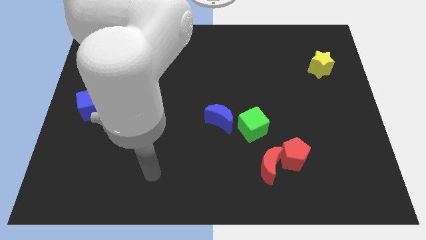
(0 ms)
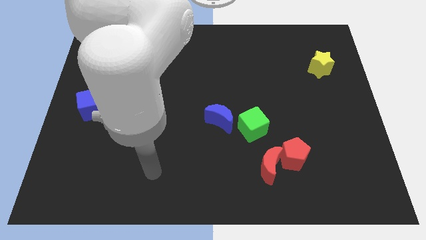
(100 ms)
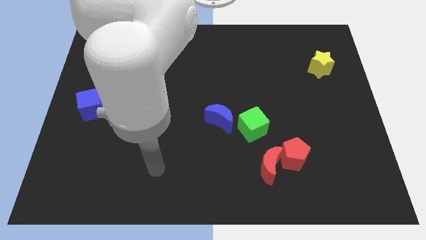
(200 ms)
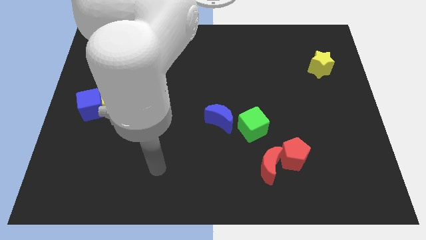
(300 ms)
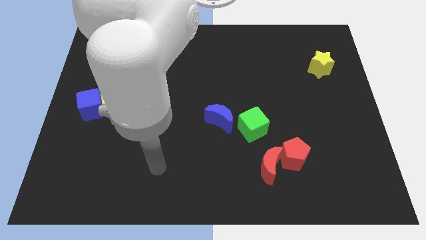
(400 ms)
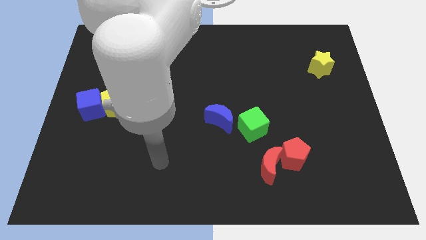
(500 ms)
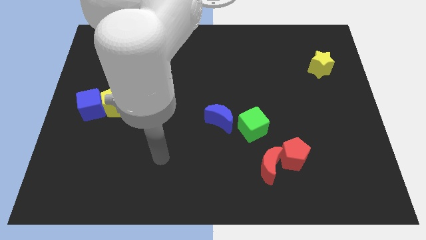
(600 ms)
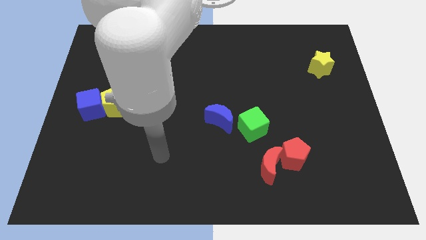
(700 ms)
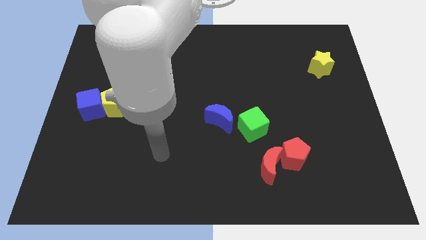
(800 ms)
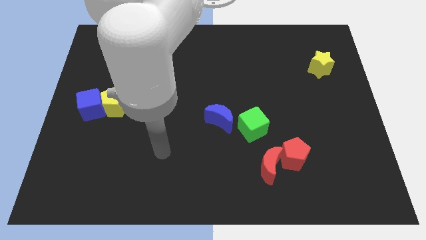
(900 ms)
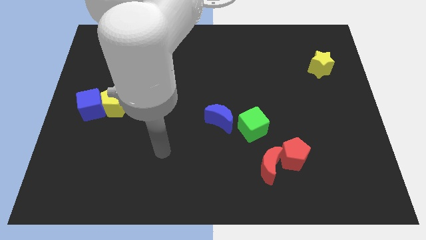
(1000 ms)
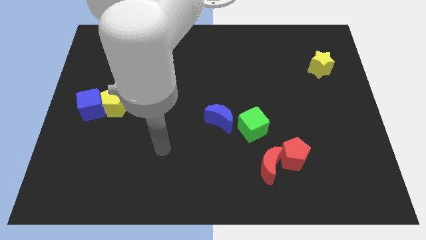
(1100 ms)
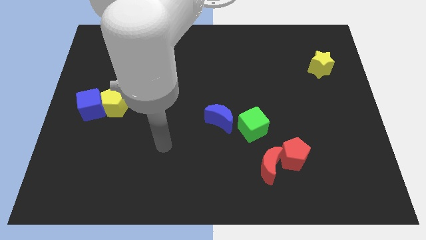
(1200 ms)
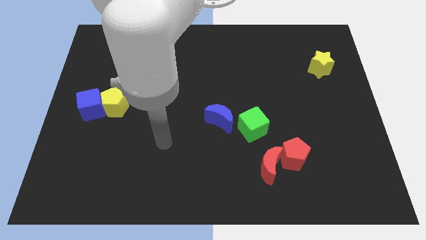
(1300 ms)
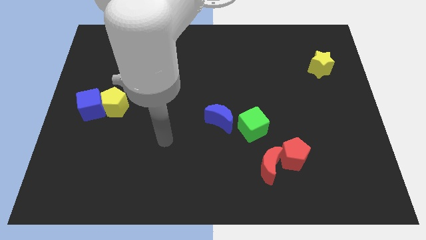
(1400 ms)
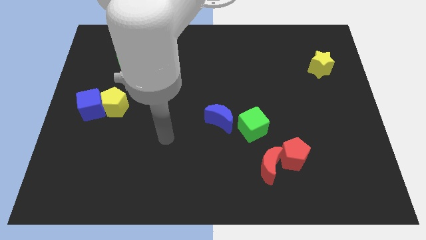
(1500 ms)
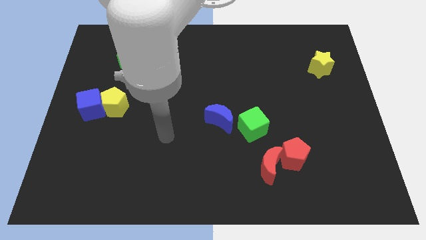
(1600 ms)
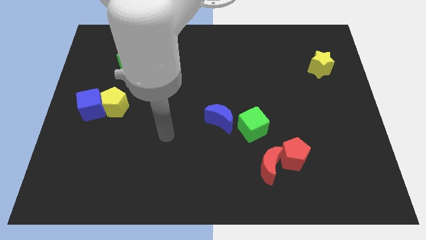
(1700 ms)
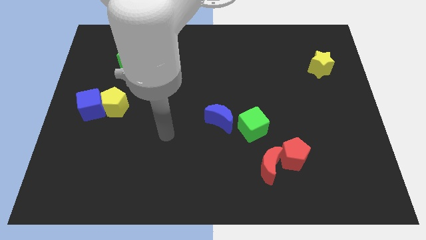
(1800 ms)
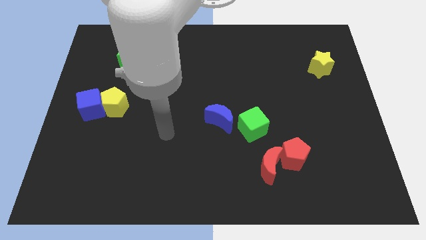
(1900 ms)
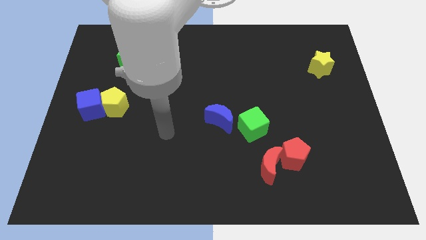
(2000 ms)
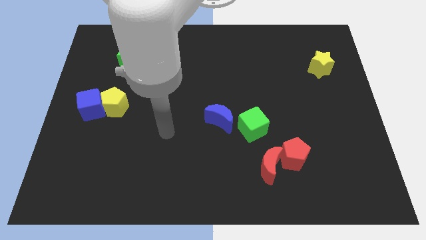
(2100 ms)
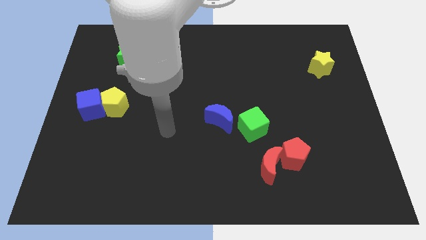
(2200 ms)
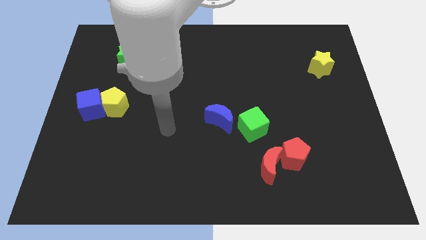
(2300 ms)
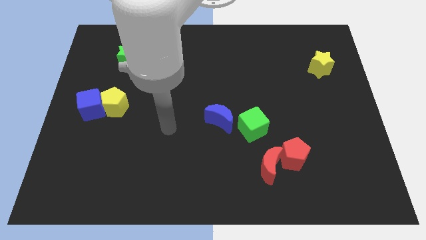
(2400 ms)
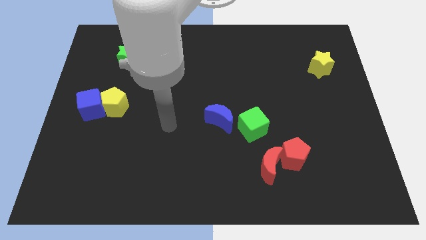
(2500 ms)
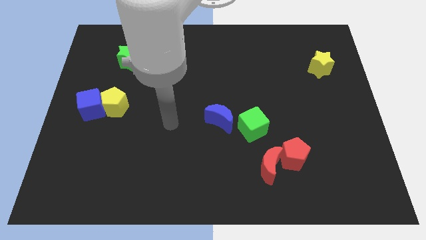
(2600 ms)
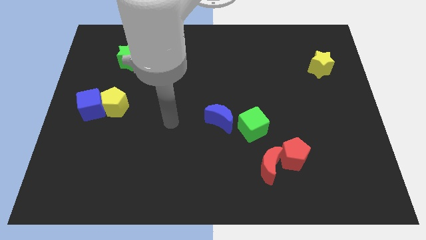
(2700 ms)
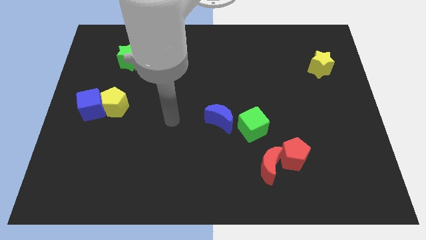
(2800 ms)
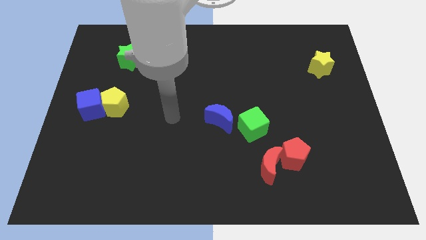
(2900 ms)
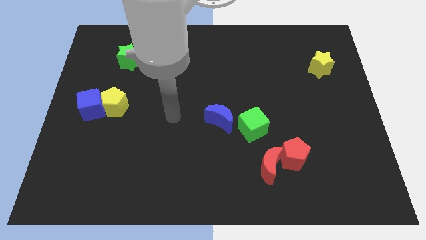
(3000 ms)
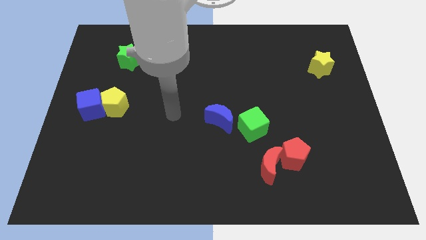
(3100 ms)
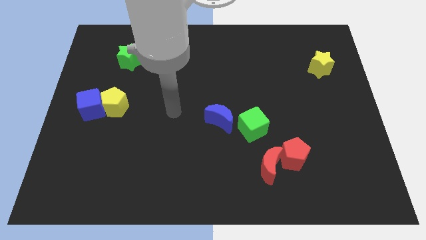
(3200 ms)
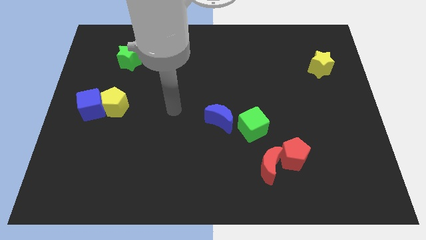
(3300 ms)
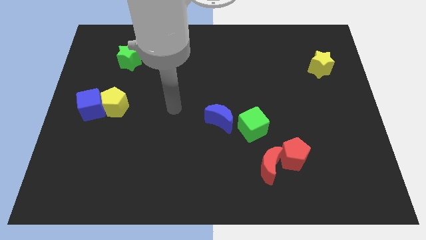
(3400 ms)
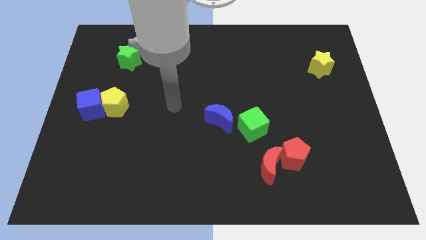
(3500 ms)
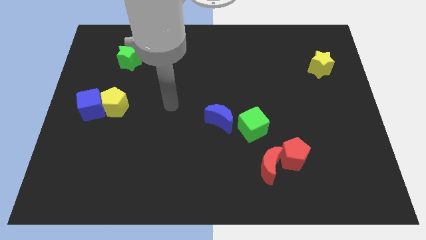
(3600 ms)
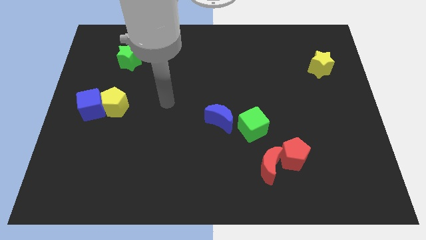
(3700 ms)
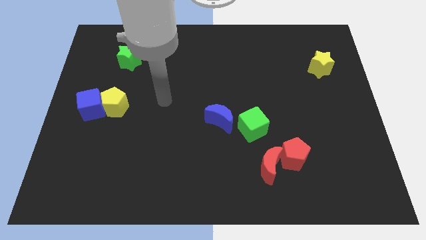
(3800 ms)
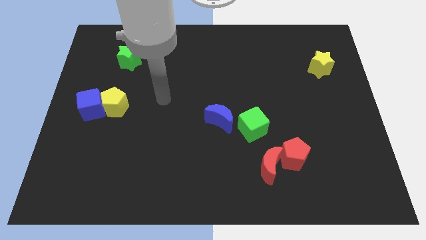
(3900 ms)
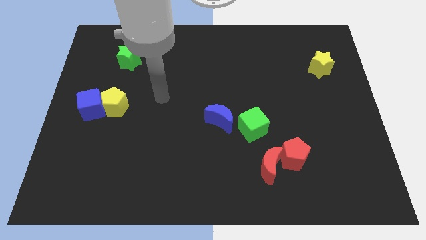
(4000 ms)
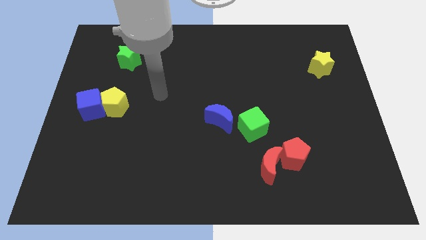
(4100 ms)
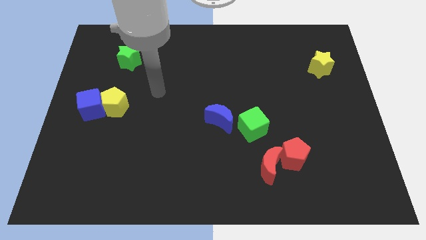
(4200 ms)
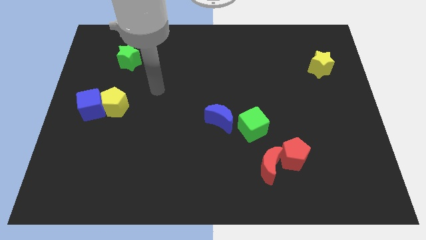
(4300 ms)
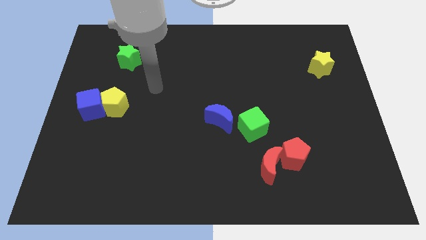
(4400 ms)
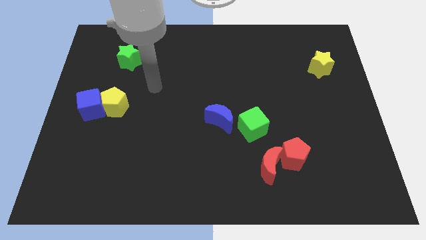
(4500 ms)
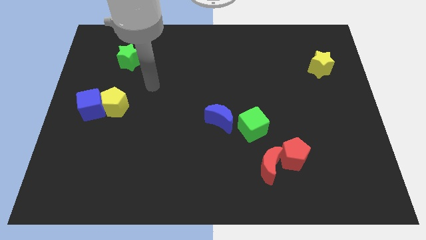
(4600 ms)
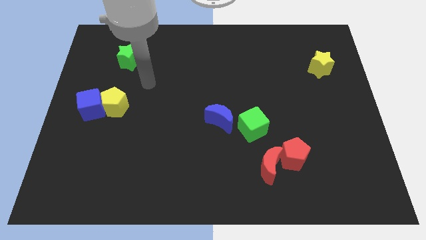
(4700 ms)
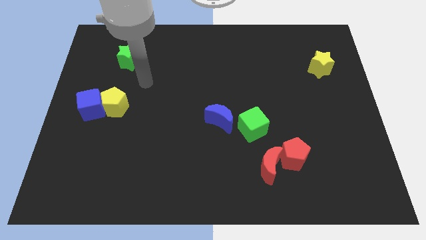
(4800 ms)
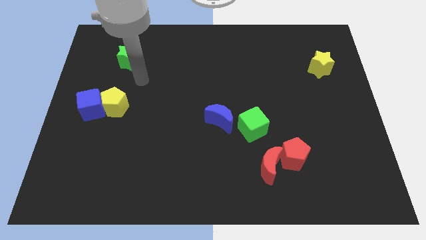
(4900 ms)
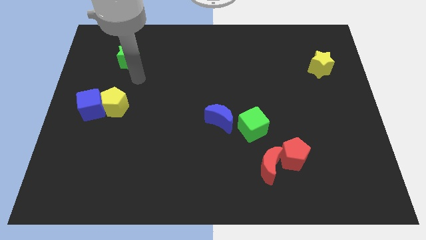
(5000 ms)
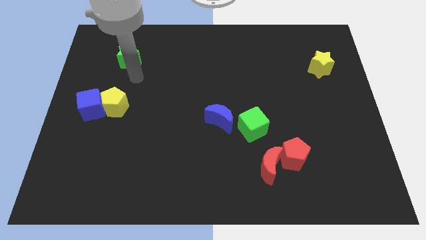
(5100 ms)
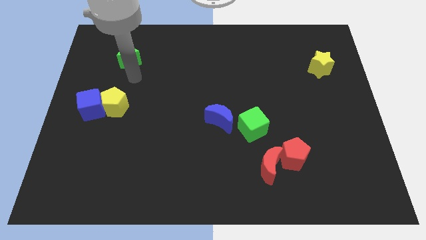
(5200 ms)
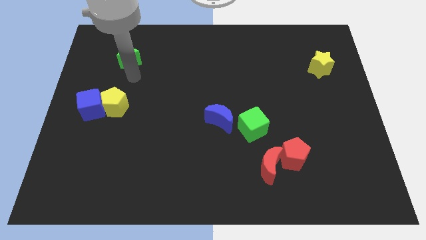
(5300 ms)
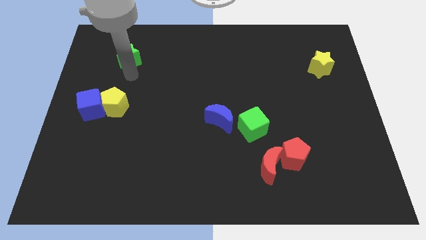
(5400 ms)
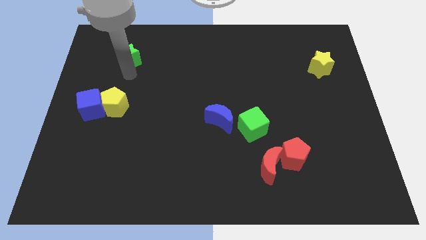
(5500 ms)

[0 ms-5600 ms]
point the arm in between the green star and the yellow pentagon

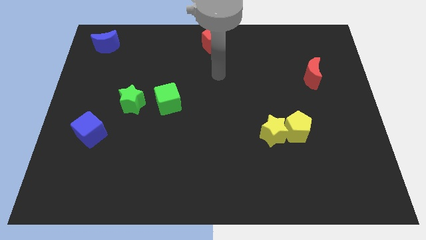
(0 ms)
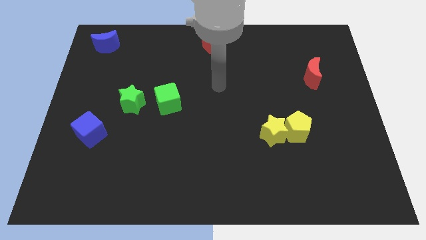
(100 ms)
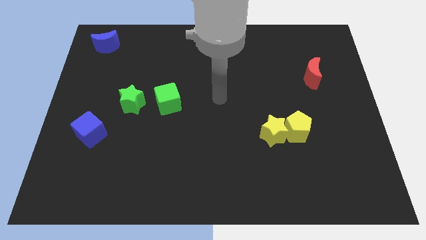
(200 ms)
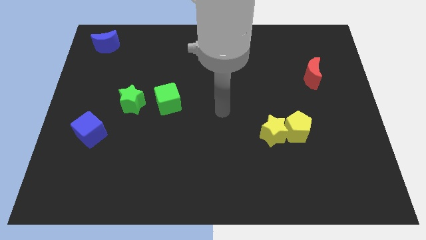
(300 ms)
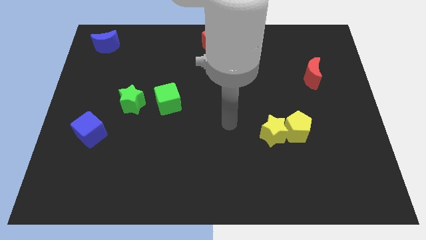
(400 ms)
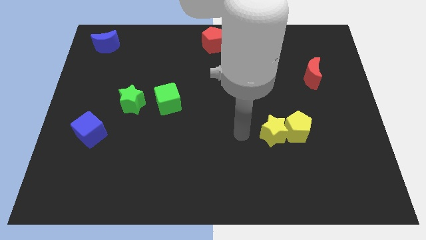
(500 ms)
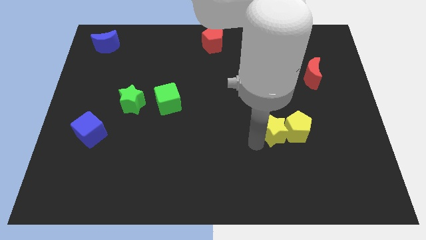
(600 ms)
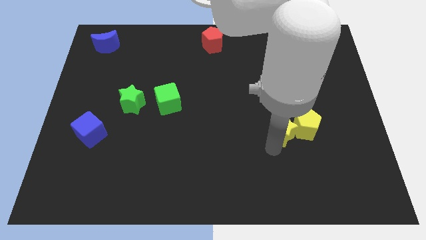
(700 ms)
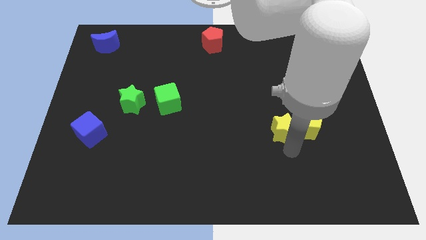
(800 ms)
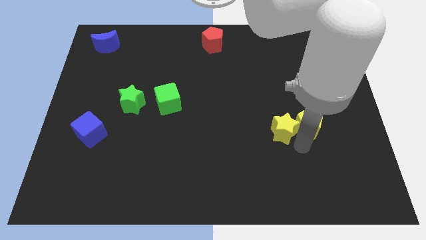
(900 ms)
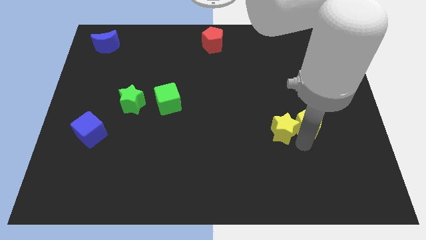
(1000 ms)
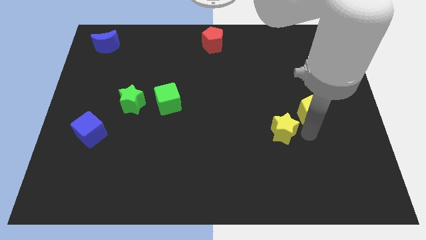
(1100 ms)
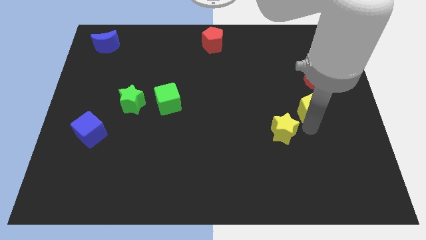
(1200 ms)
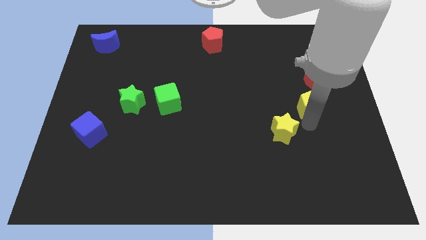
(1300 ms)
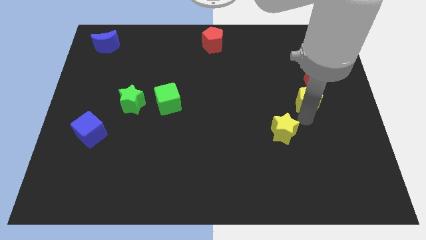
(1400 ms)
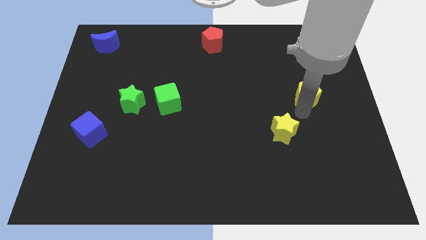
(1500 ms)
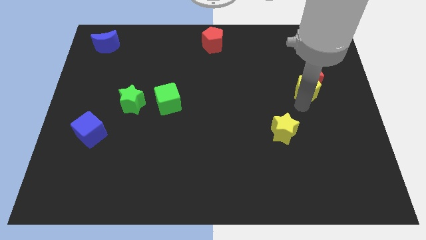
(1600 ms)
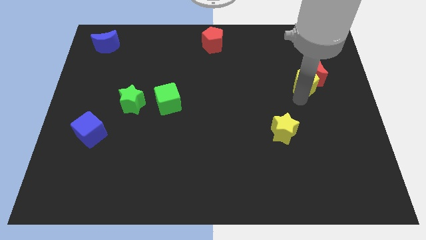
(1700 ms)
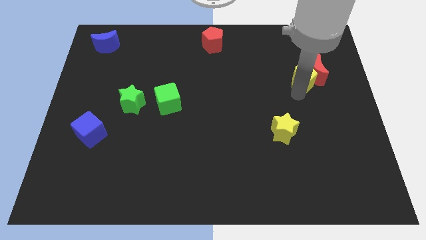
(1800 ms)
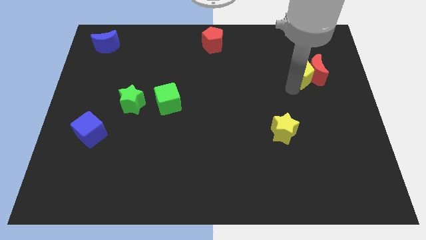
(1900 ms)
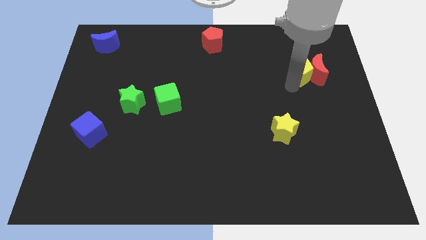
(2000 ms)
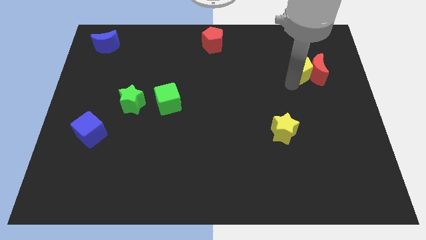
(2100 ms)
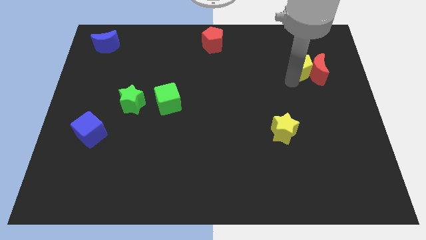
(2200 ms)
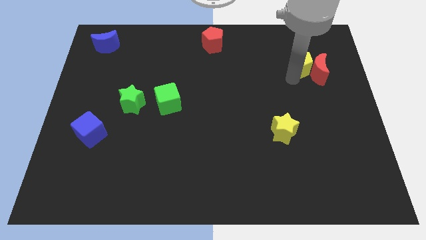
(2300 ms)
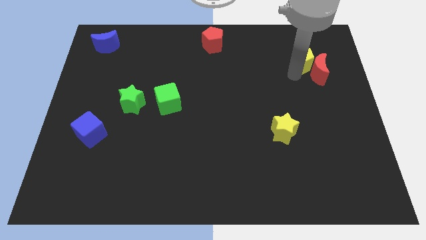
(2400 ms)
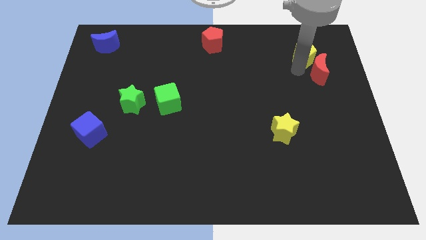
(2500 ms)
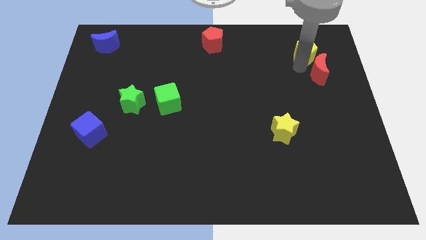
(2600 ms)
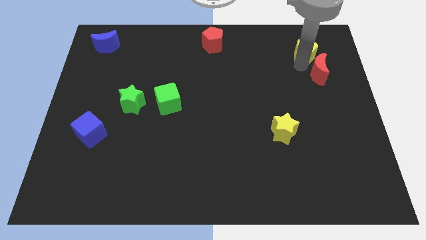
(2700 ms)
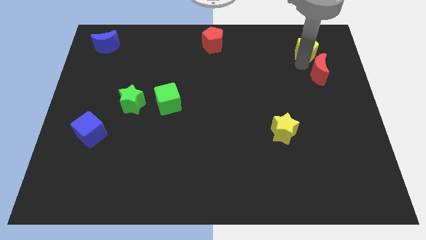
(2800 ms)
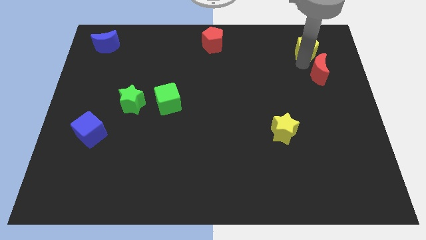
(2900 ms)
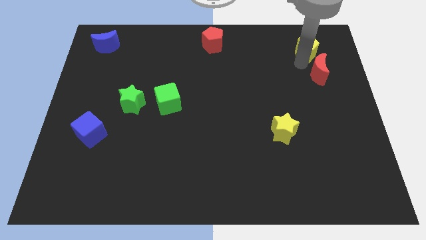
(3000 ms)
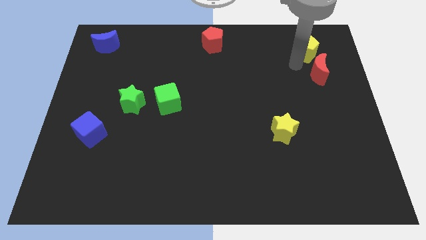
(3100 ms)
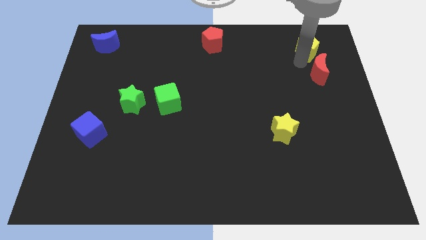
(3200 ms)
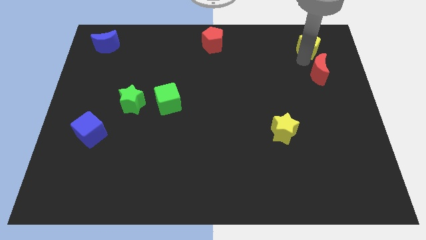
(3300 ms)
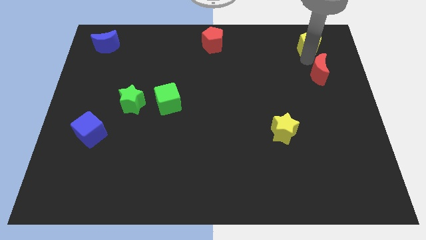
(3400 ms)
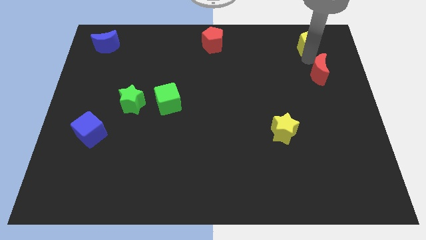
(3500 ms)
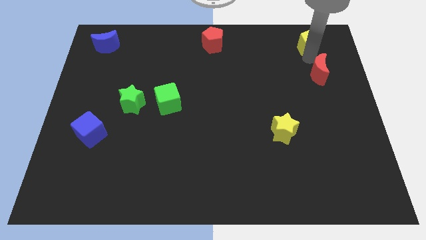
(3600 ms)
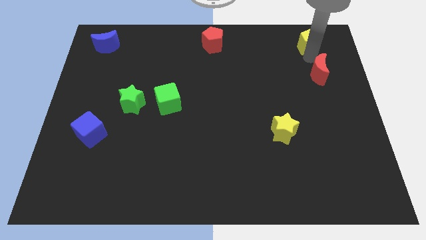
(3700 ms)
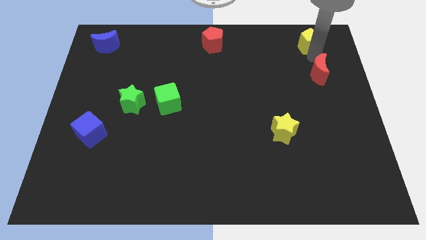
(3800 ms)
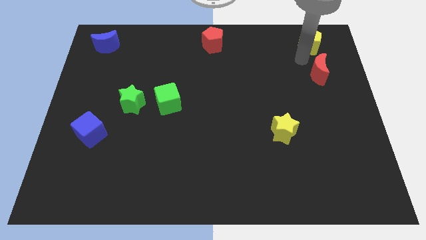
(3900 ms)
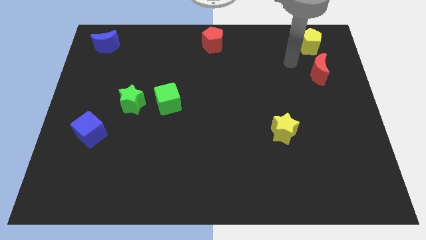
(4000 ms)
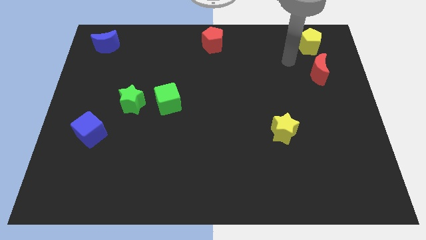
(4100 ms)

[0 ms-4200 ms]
slide the yellow pentagon to the top side of the red crescent
